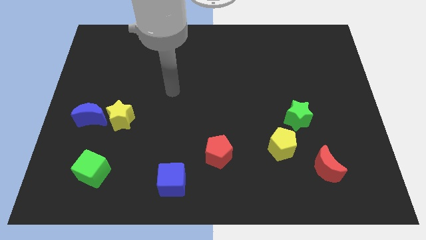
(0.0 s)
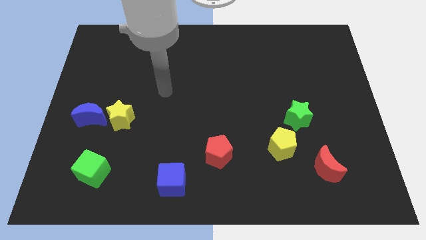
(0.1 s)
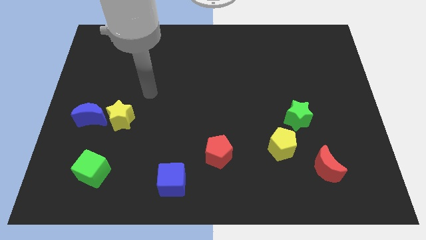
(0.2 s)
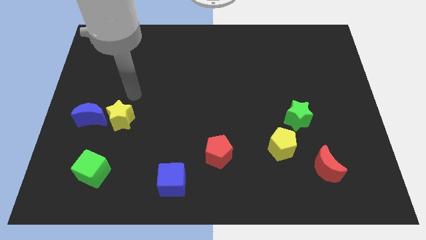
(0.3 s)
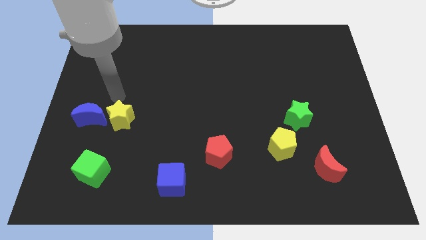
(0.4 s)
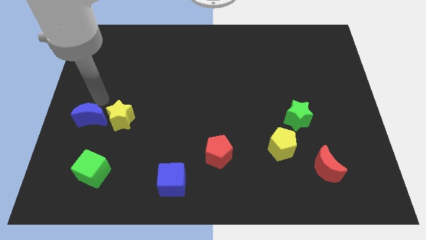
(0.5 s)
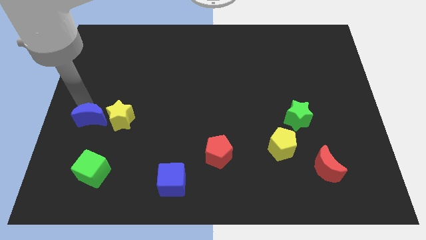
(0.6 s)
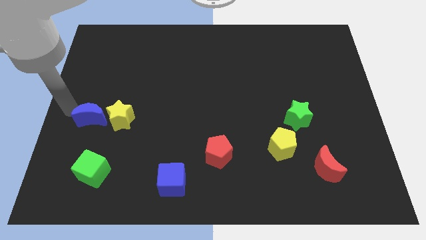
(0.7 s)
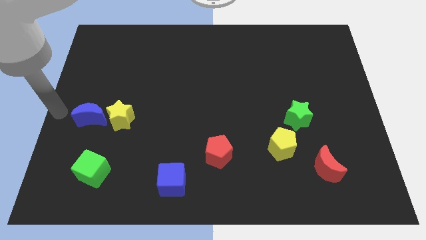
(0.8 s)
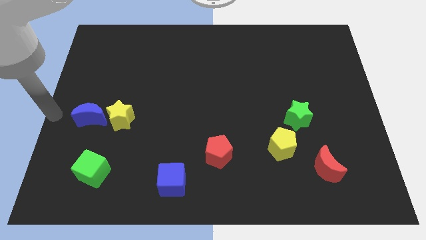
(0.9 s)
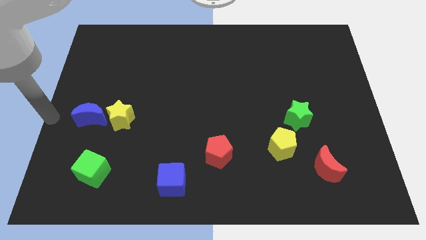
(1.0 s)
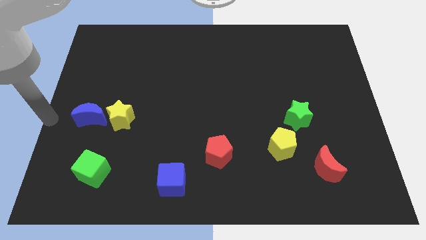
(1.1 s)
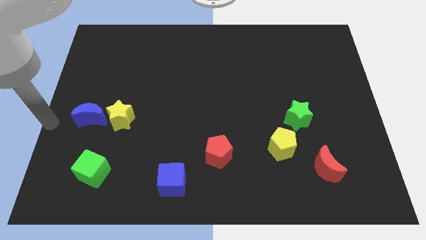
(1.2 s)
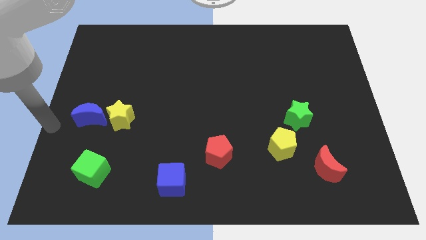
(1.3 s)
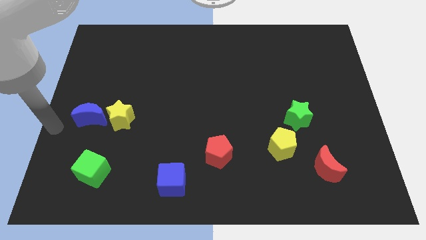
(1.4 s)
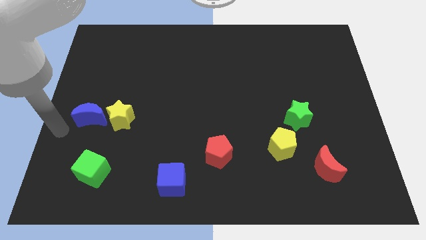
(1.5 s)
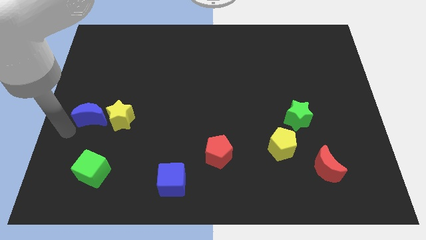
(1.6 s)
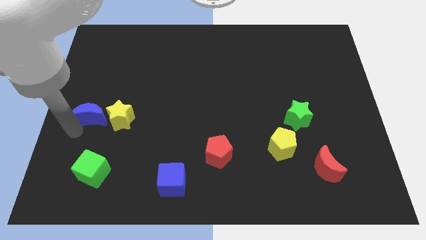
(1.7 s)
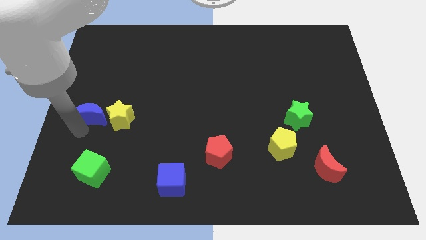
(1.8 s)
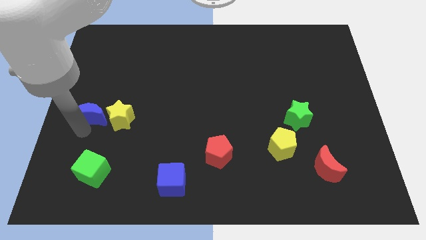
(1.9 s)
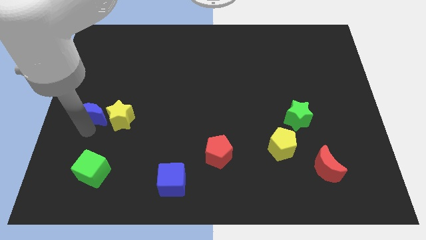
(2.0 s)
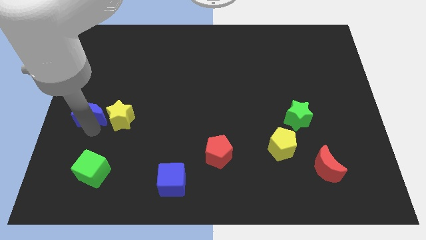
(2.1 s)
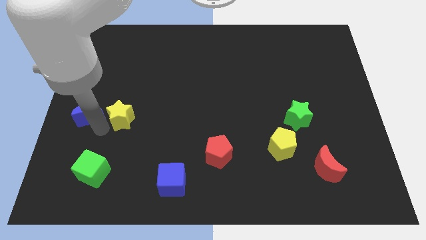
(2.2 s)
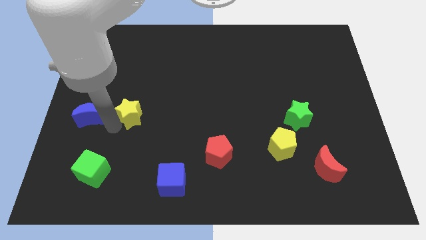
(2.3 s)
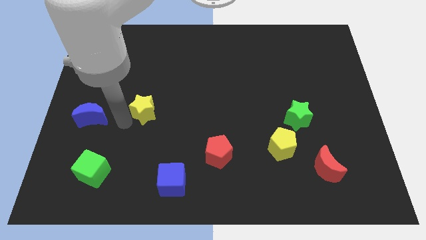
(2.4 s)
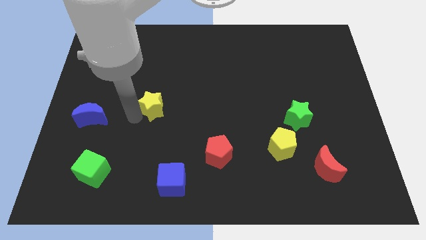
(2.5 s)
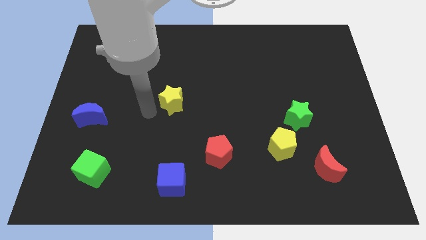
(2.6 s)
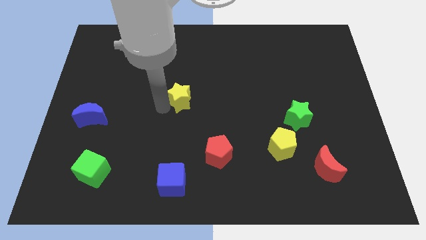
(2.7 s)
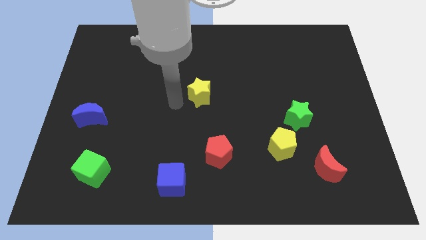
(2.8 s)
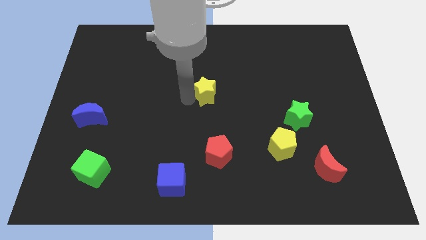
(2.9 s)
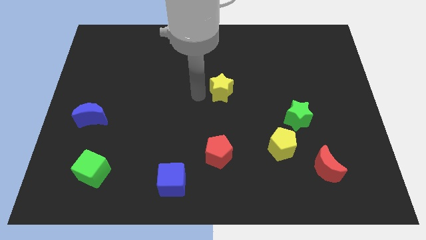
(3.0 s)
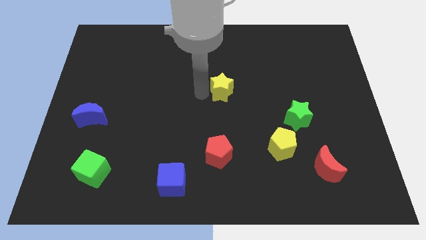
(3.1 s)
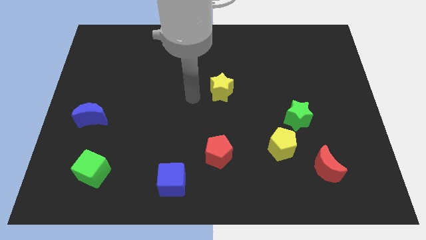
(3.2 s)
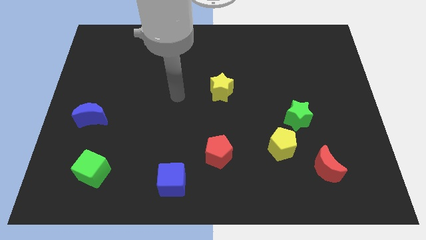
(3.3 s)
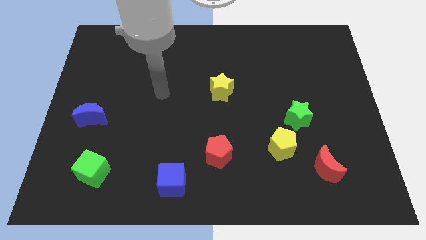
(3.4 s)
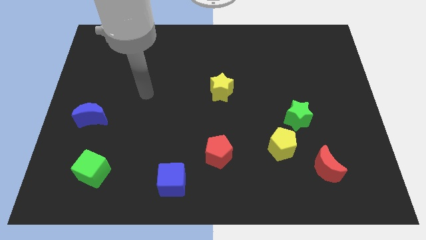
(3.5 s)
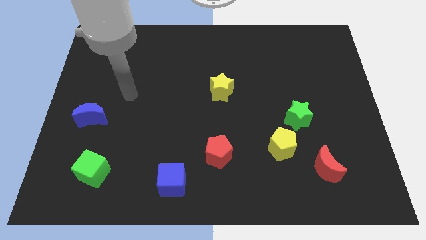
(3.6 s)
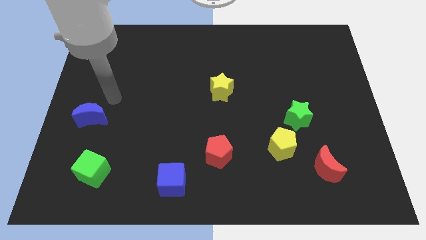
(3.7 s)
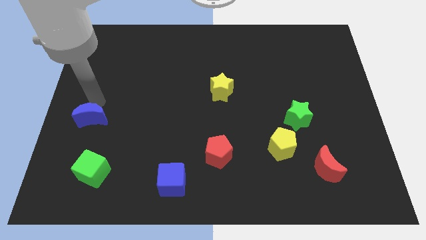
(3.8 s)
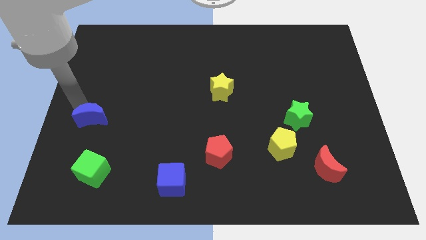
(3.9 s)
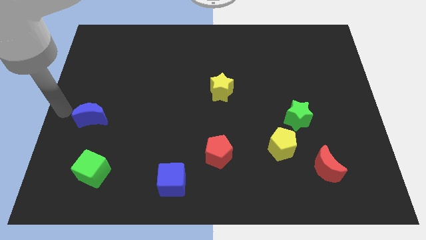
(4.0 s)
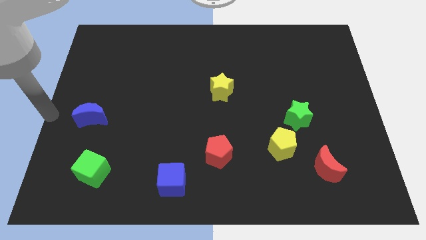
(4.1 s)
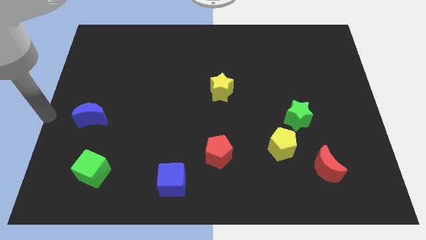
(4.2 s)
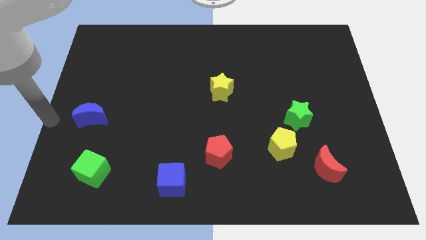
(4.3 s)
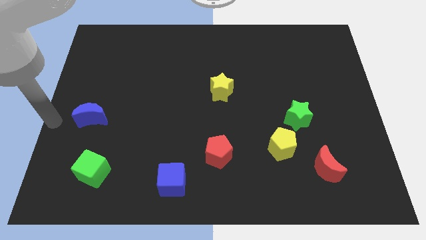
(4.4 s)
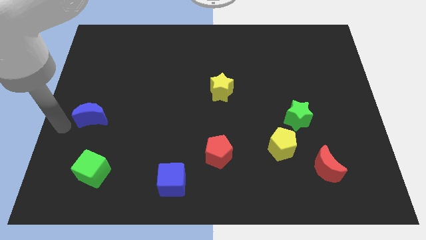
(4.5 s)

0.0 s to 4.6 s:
push the yellow star towards the center of the board

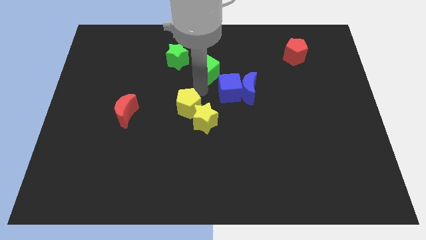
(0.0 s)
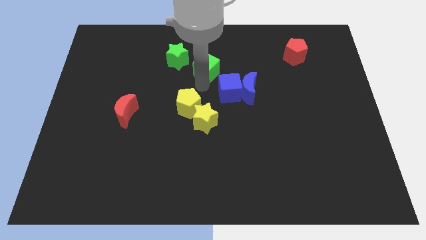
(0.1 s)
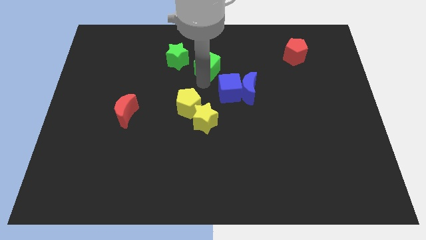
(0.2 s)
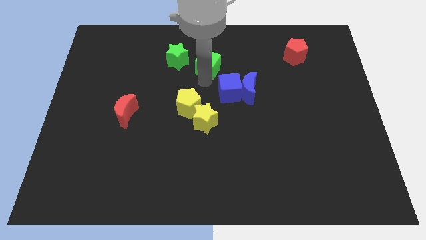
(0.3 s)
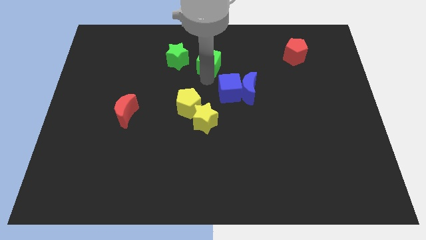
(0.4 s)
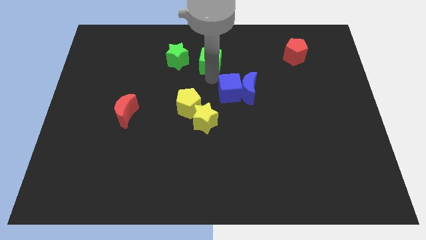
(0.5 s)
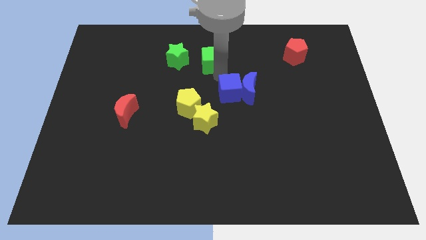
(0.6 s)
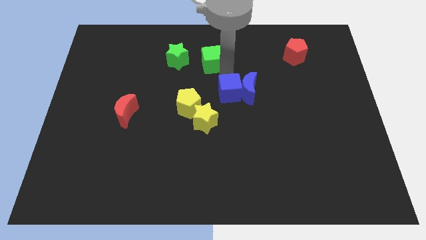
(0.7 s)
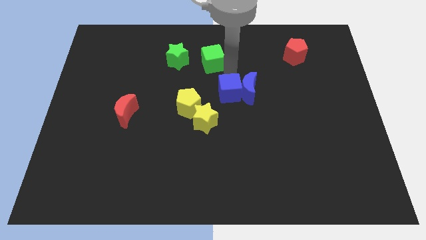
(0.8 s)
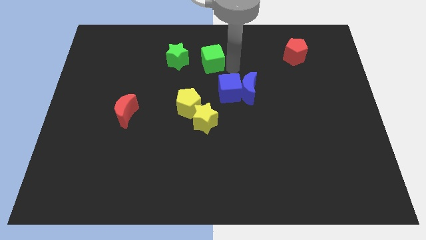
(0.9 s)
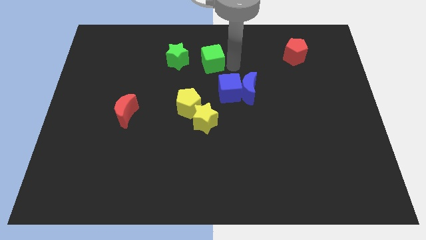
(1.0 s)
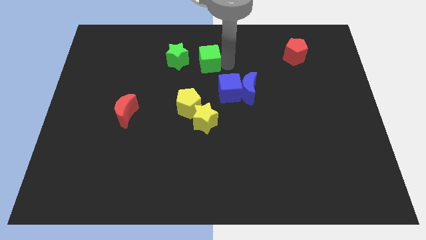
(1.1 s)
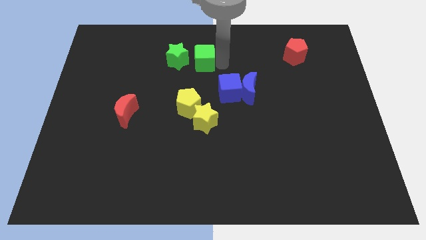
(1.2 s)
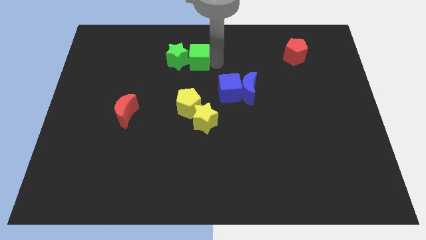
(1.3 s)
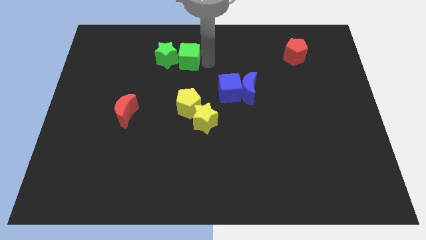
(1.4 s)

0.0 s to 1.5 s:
push the green cube into the green star

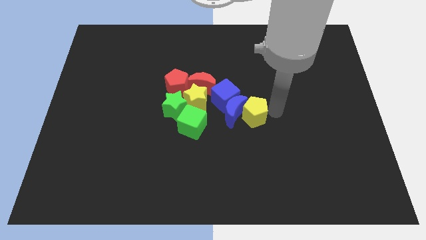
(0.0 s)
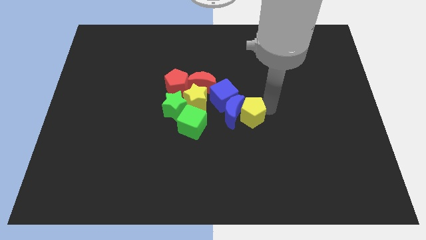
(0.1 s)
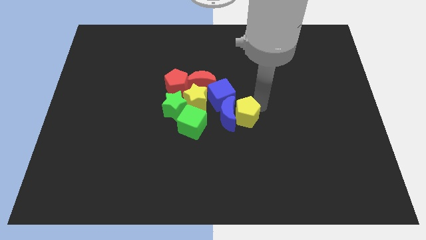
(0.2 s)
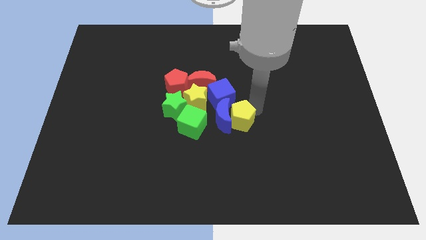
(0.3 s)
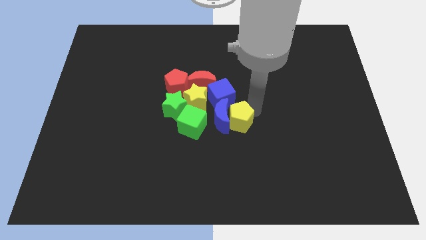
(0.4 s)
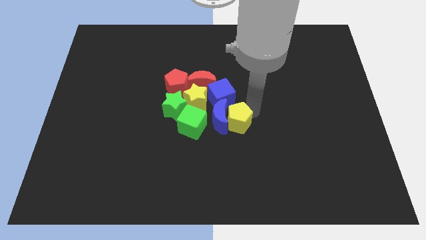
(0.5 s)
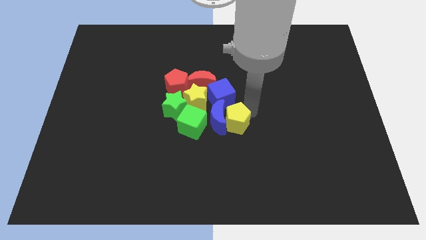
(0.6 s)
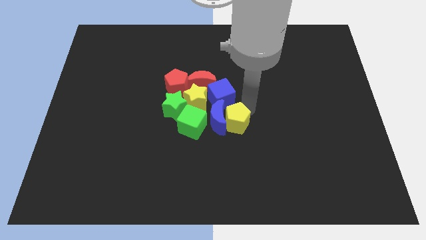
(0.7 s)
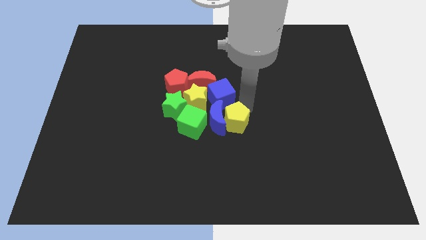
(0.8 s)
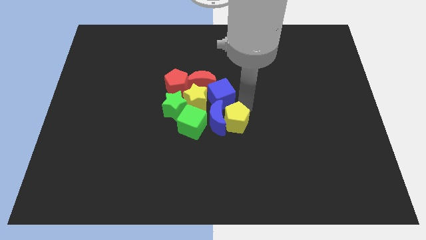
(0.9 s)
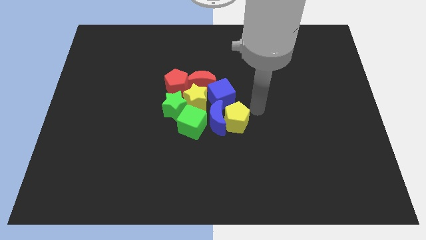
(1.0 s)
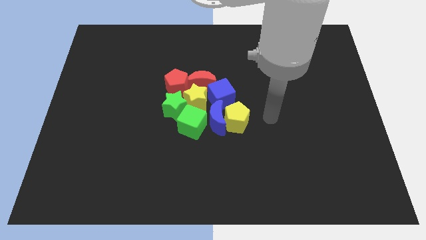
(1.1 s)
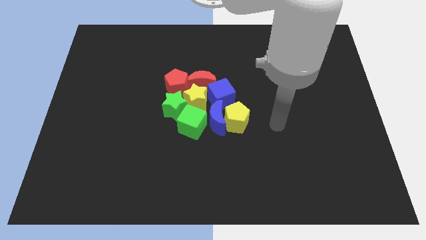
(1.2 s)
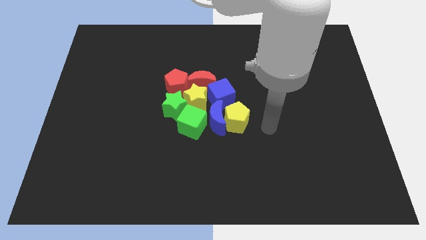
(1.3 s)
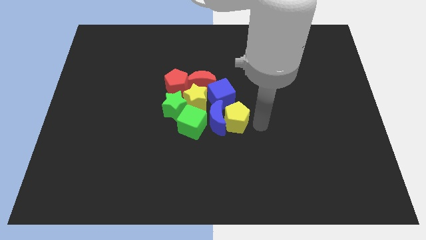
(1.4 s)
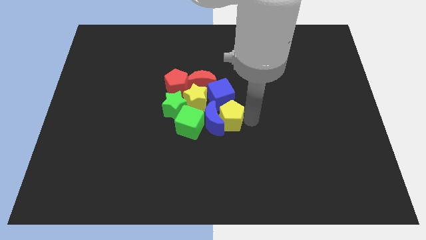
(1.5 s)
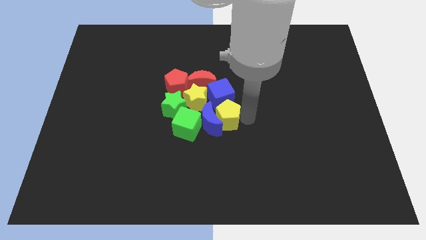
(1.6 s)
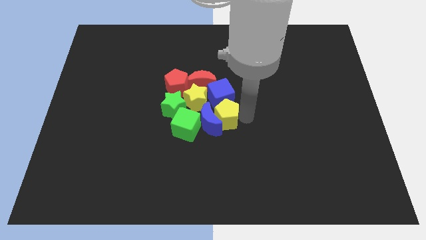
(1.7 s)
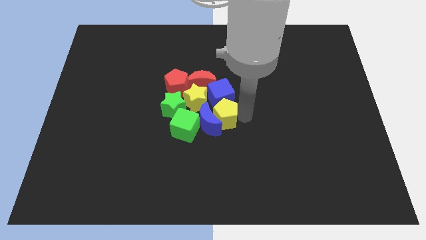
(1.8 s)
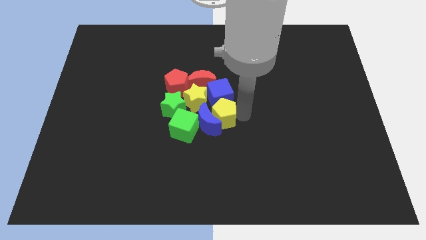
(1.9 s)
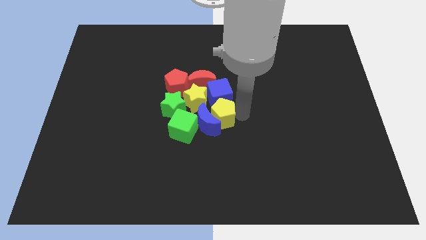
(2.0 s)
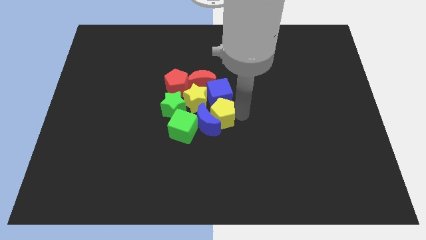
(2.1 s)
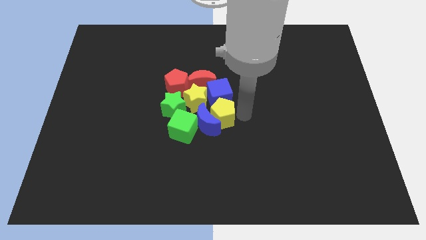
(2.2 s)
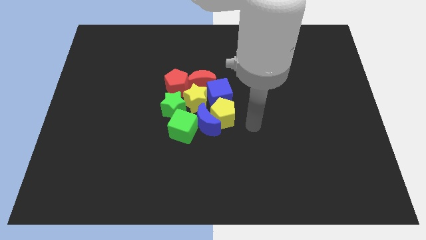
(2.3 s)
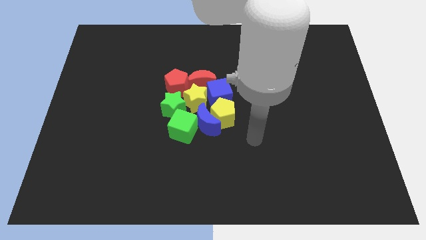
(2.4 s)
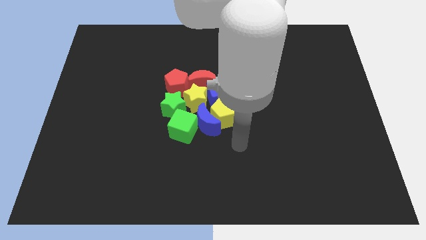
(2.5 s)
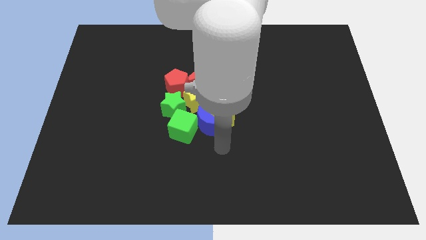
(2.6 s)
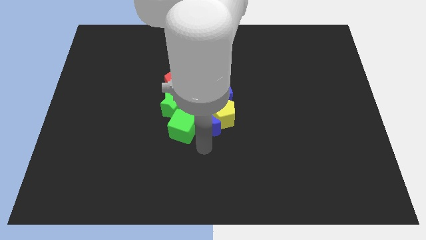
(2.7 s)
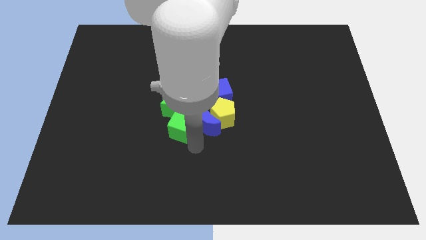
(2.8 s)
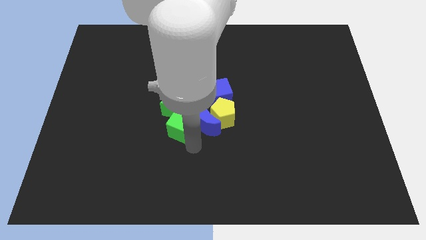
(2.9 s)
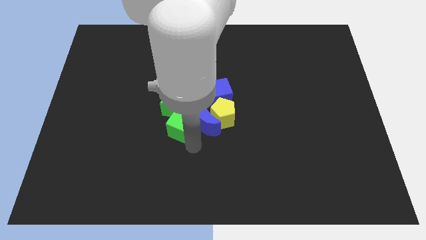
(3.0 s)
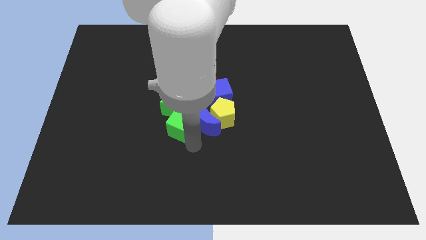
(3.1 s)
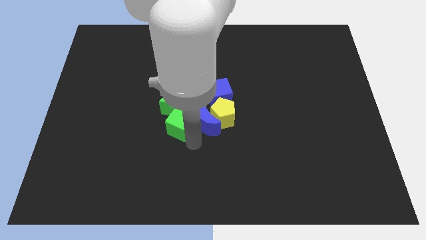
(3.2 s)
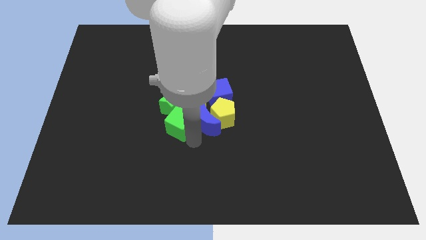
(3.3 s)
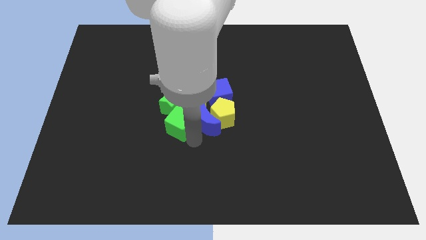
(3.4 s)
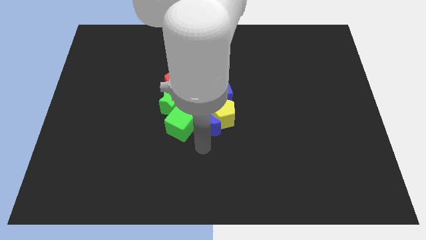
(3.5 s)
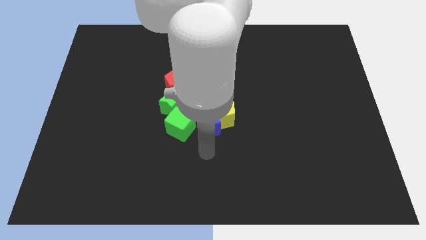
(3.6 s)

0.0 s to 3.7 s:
adjust the group of blocks at the center of the board
